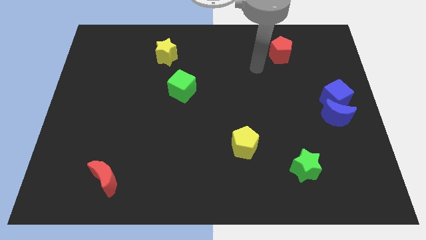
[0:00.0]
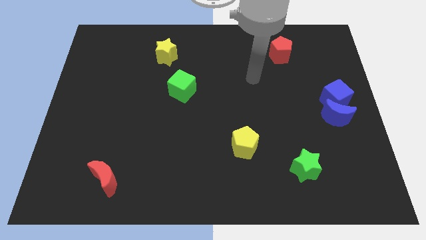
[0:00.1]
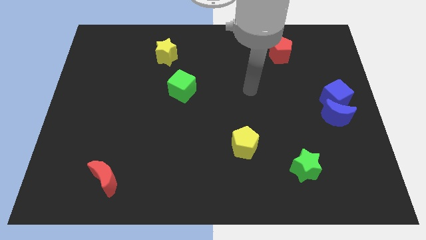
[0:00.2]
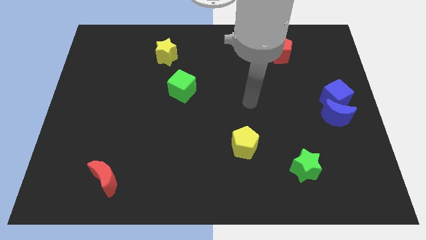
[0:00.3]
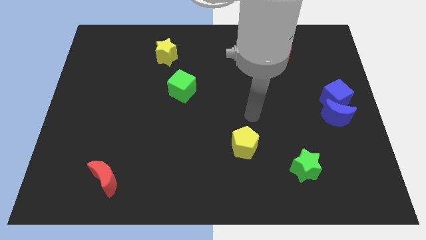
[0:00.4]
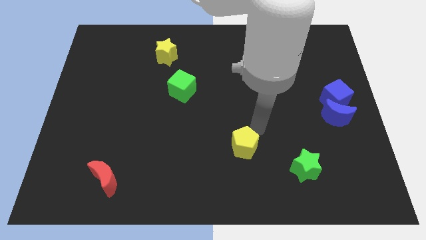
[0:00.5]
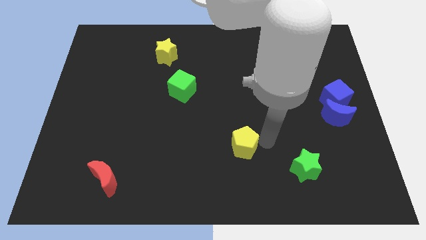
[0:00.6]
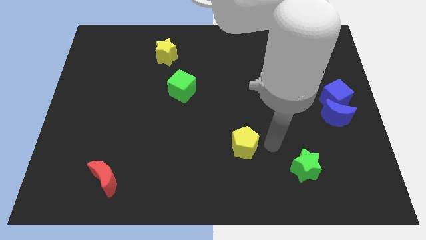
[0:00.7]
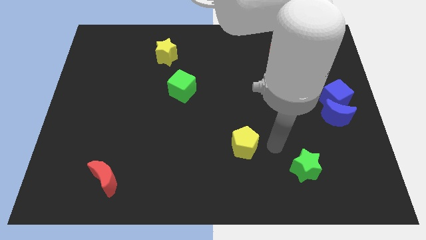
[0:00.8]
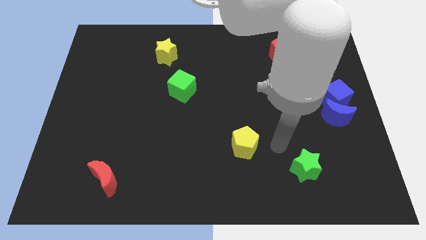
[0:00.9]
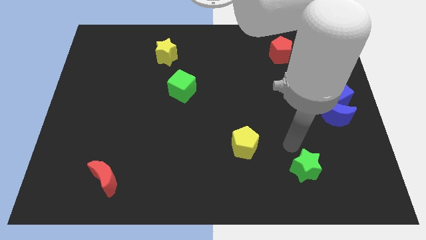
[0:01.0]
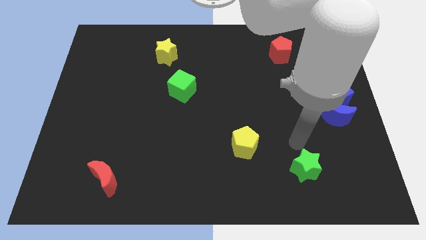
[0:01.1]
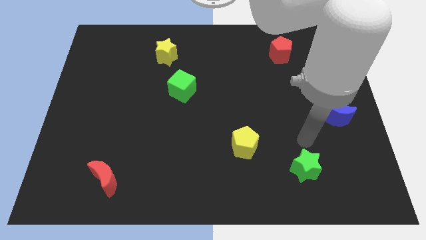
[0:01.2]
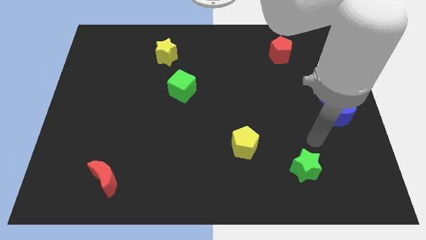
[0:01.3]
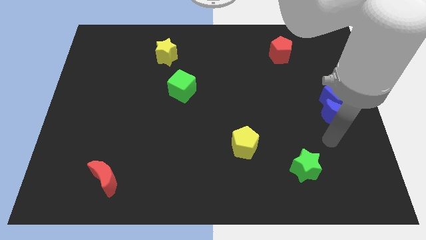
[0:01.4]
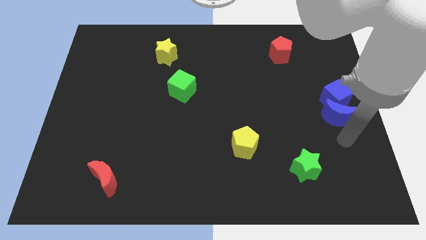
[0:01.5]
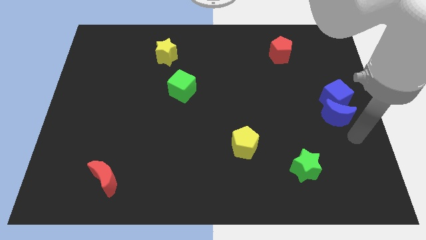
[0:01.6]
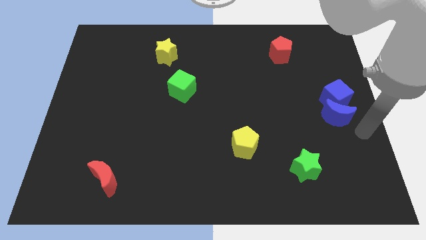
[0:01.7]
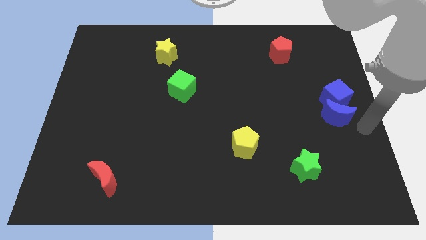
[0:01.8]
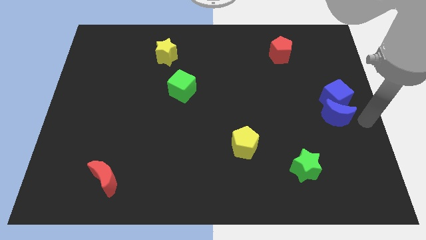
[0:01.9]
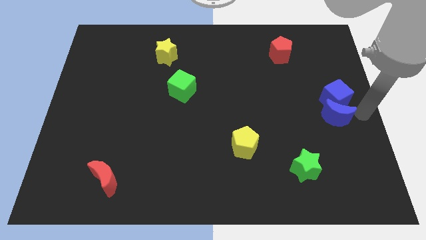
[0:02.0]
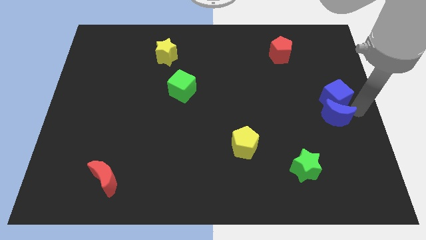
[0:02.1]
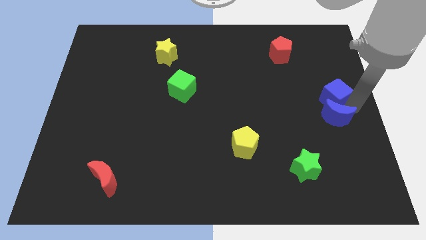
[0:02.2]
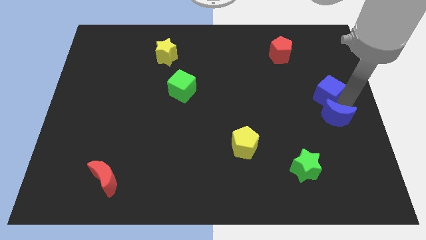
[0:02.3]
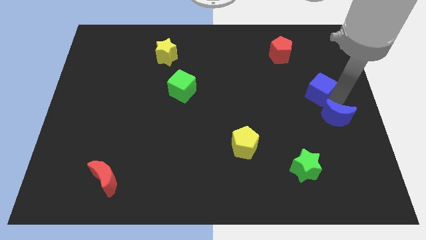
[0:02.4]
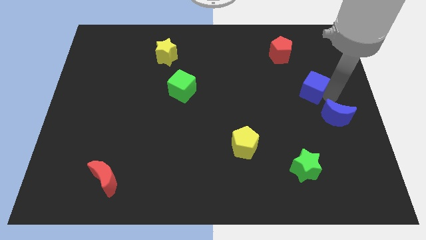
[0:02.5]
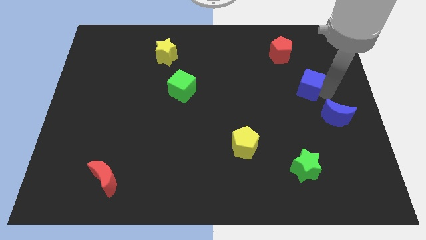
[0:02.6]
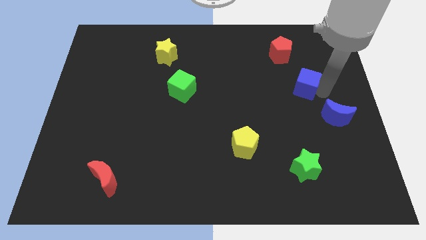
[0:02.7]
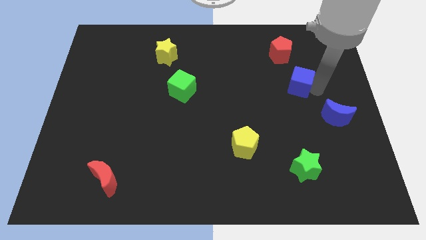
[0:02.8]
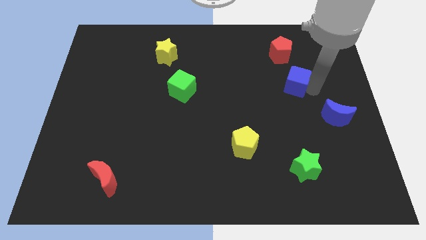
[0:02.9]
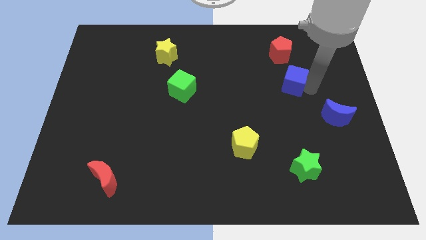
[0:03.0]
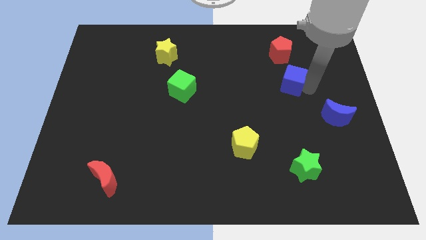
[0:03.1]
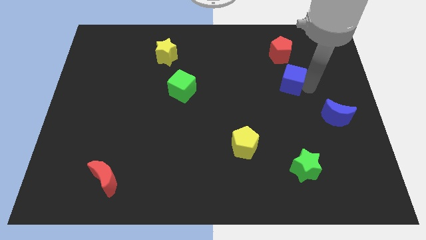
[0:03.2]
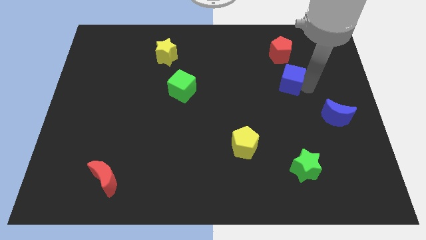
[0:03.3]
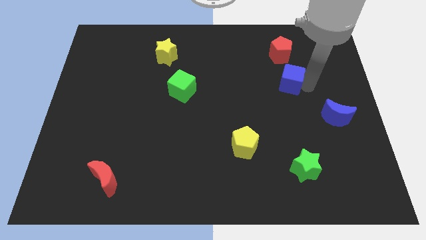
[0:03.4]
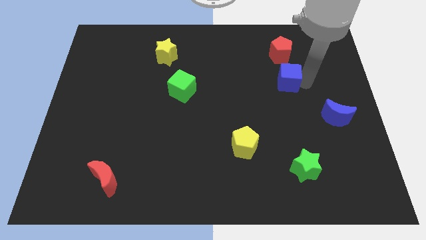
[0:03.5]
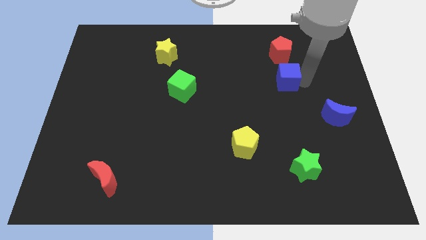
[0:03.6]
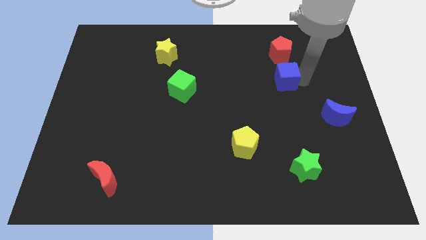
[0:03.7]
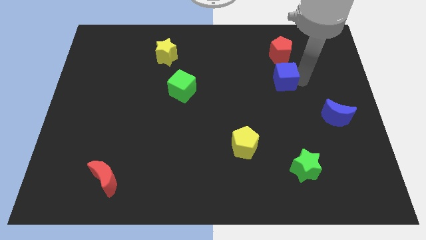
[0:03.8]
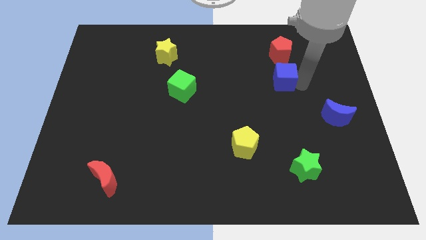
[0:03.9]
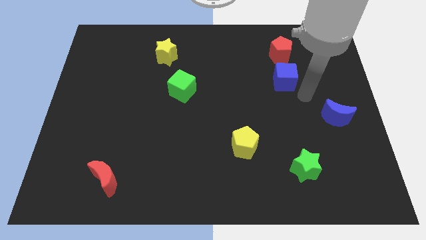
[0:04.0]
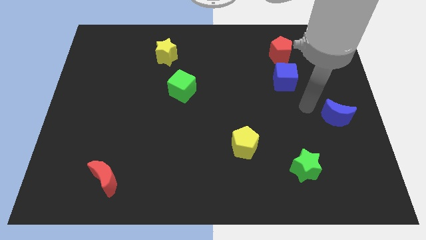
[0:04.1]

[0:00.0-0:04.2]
place the blue cube vertically below the red pentagon

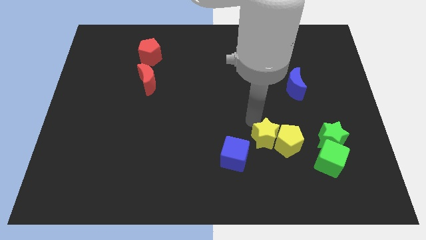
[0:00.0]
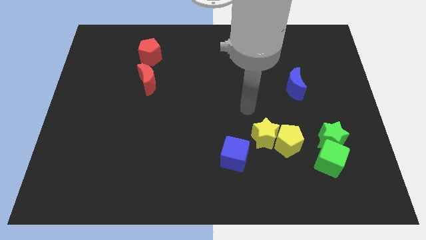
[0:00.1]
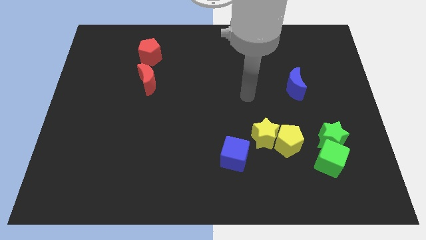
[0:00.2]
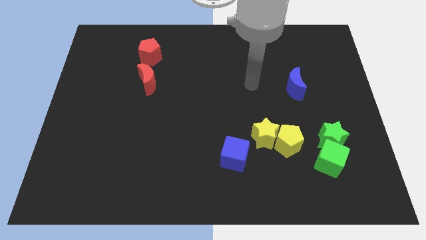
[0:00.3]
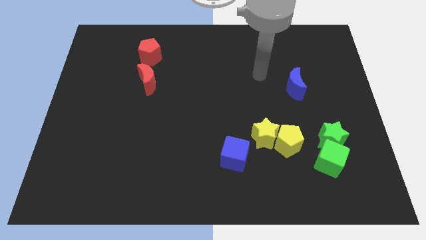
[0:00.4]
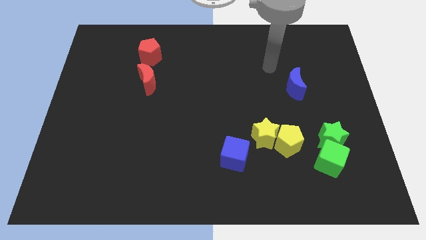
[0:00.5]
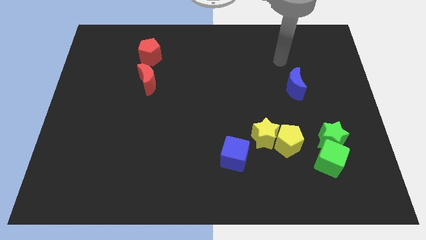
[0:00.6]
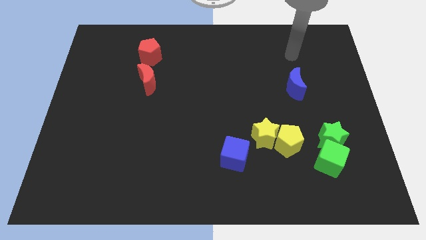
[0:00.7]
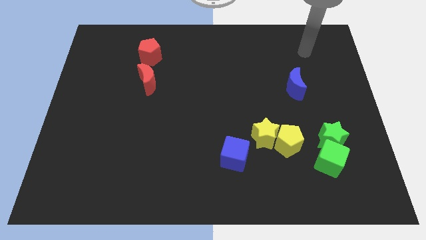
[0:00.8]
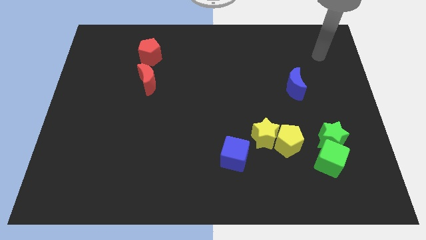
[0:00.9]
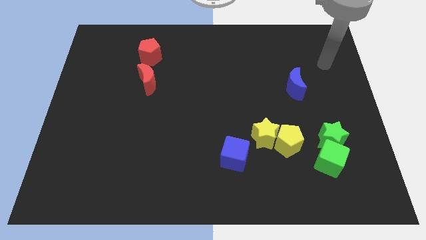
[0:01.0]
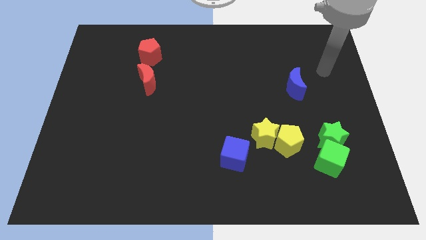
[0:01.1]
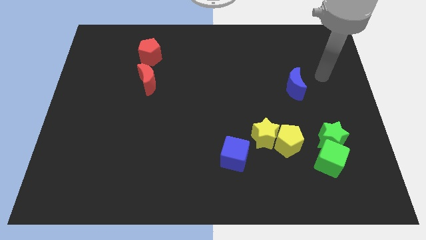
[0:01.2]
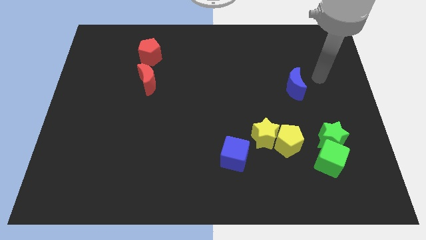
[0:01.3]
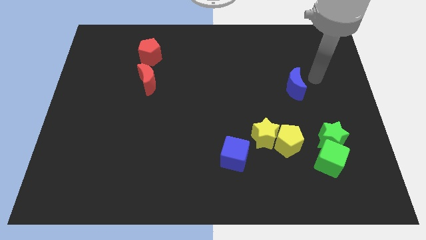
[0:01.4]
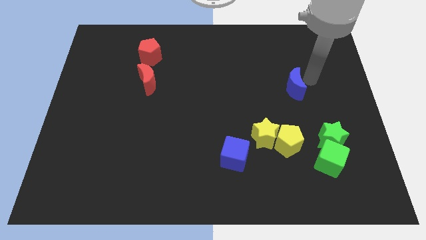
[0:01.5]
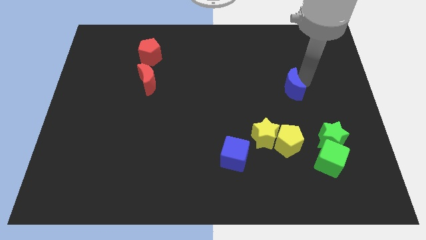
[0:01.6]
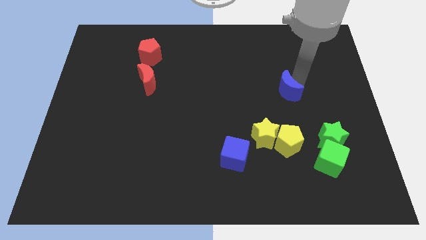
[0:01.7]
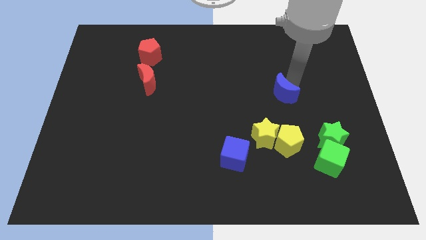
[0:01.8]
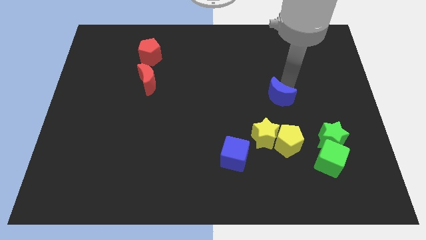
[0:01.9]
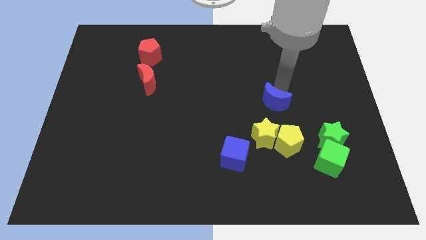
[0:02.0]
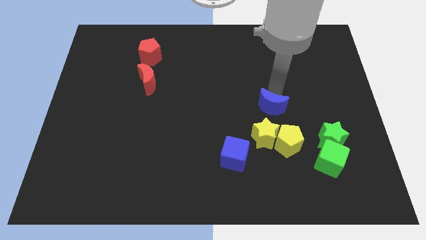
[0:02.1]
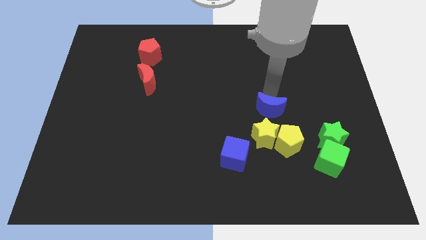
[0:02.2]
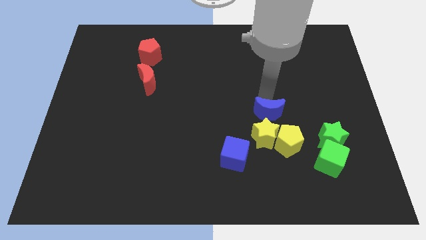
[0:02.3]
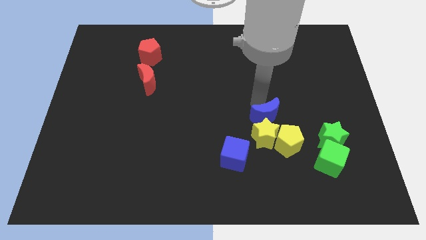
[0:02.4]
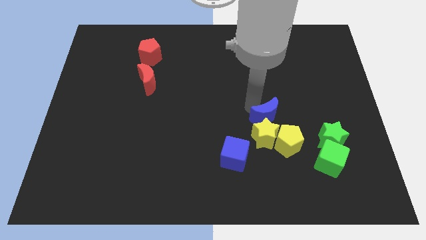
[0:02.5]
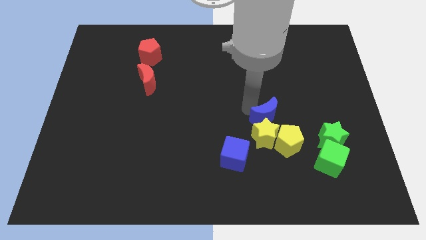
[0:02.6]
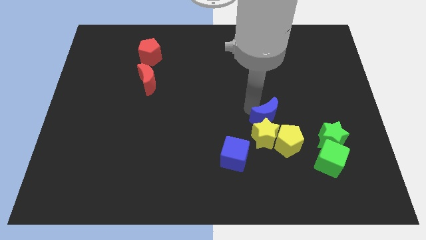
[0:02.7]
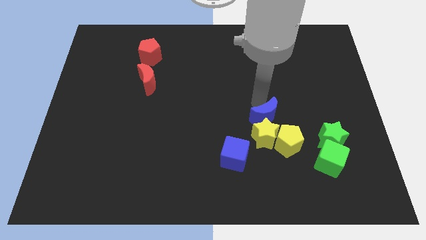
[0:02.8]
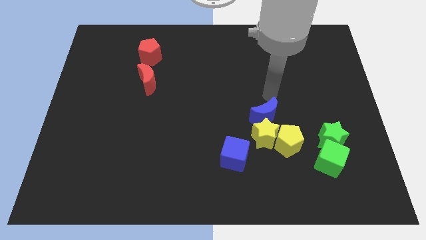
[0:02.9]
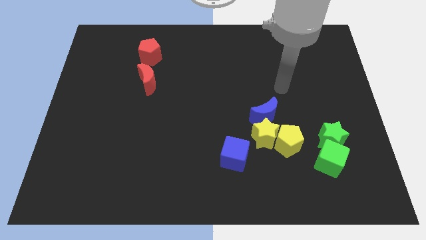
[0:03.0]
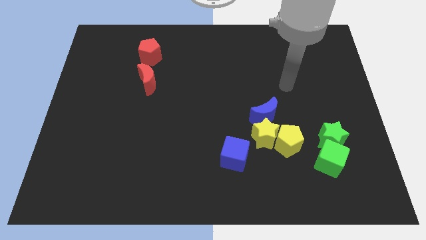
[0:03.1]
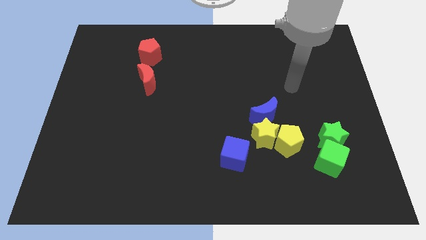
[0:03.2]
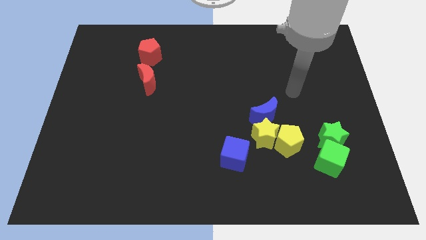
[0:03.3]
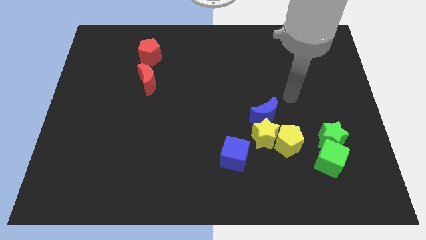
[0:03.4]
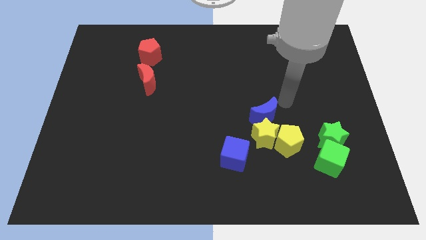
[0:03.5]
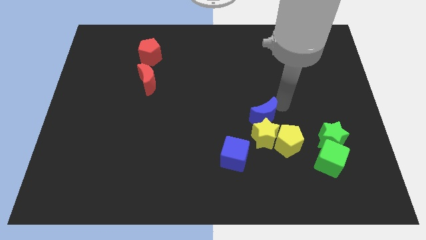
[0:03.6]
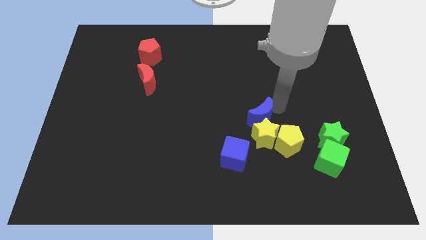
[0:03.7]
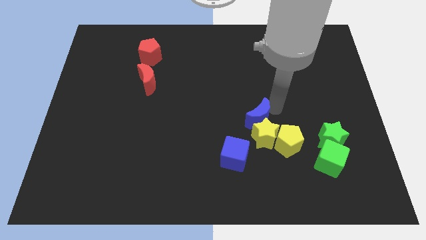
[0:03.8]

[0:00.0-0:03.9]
place the blue crescent above the blue cube

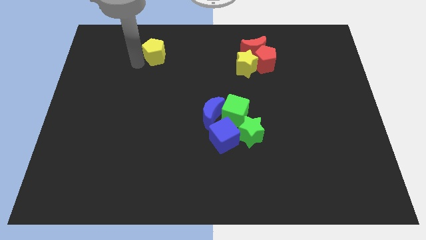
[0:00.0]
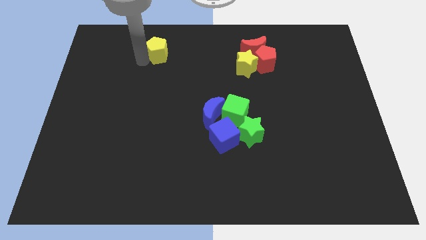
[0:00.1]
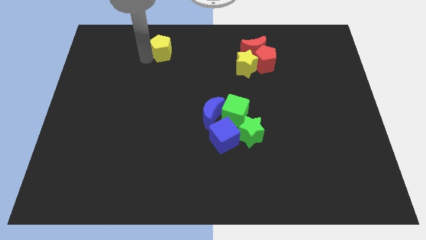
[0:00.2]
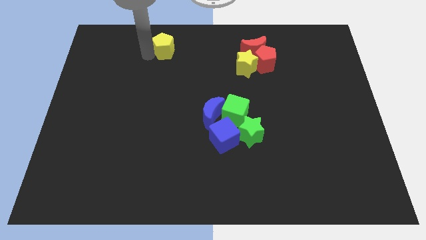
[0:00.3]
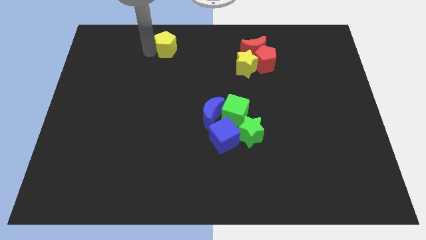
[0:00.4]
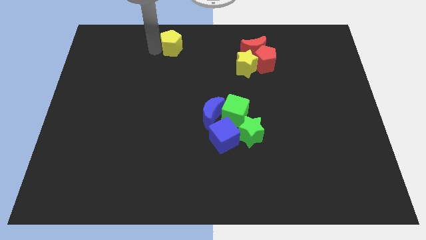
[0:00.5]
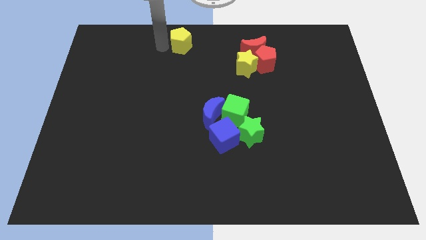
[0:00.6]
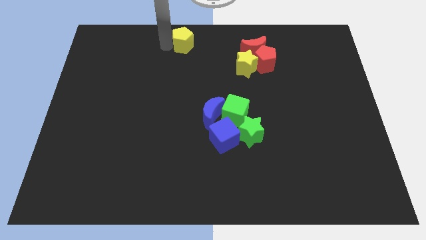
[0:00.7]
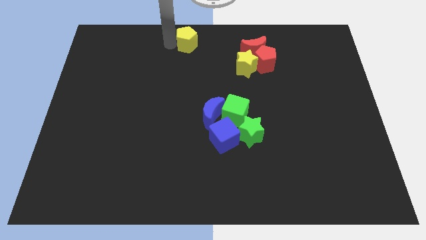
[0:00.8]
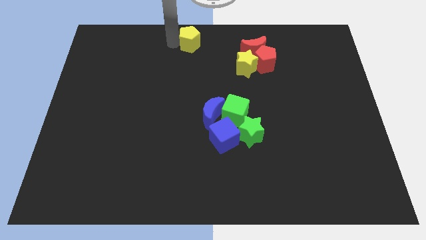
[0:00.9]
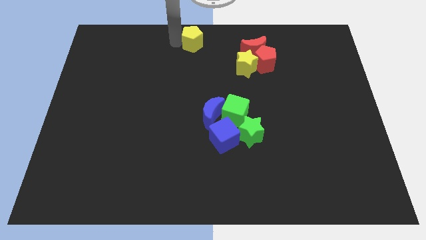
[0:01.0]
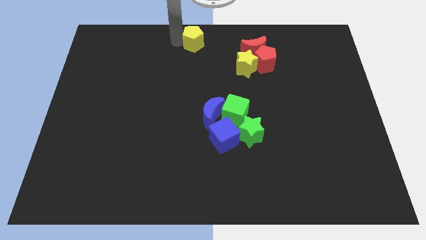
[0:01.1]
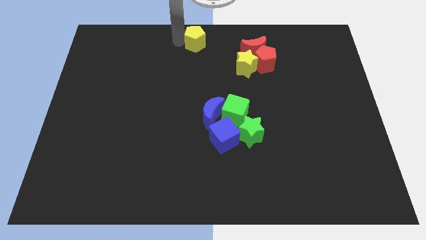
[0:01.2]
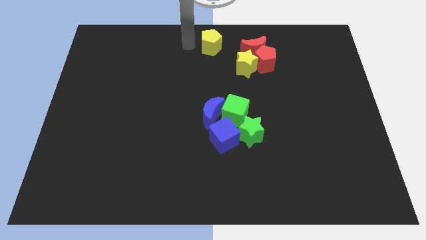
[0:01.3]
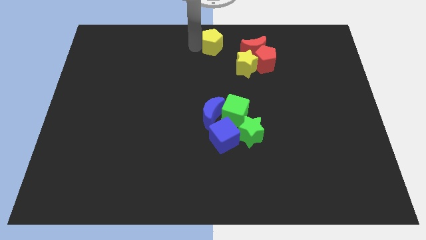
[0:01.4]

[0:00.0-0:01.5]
move the yellow pentagon slightly to the right side of the board
